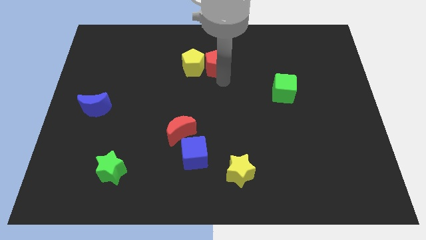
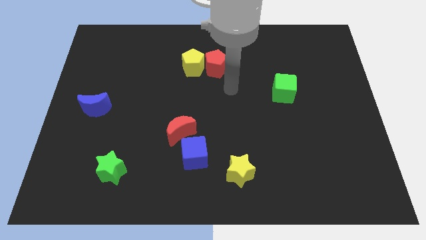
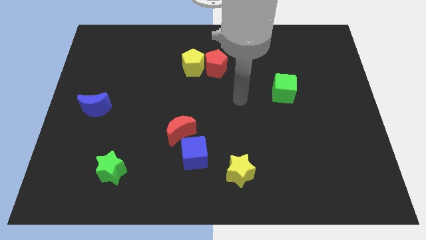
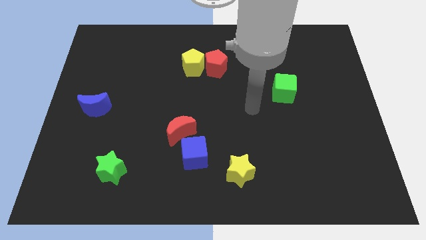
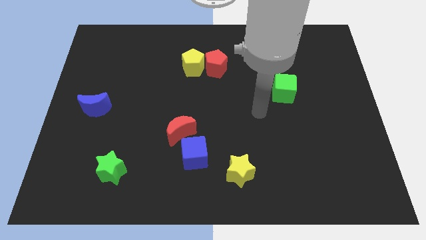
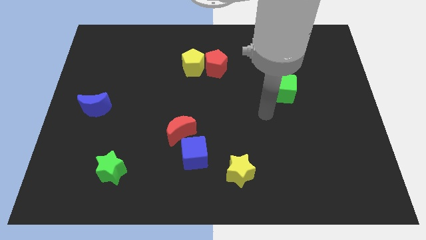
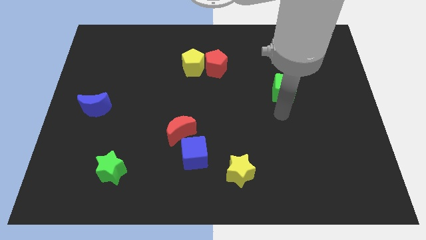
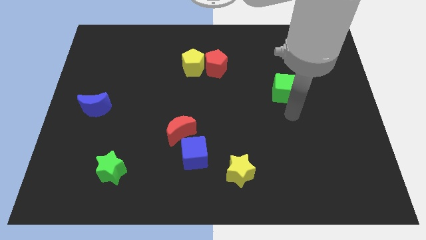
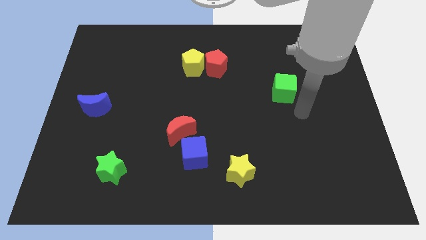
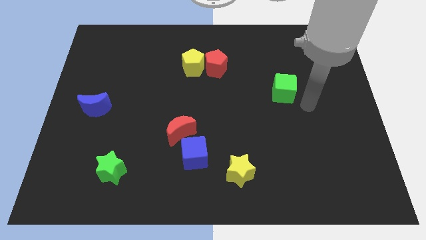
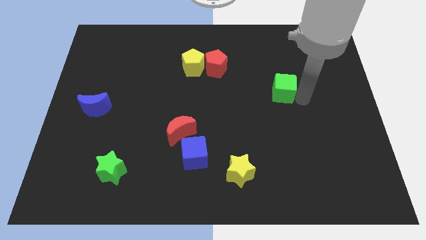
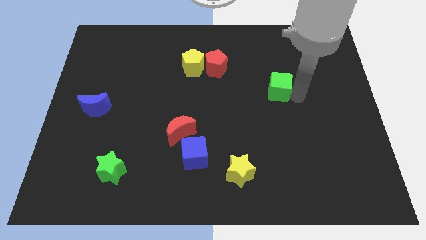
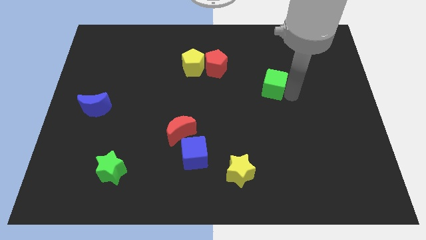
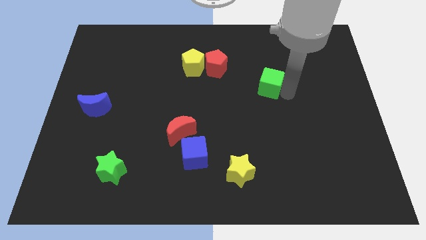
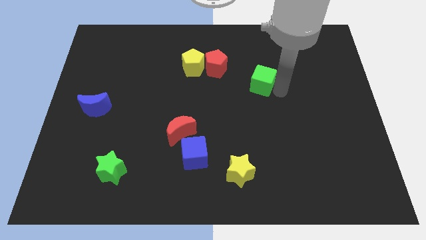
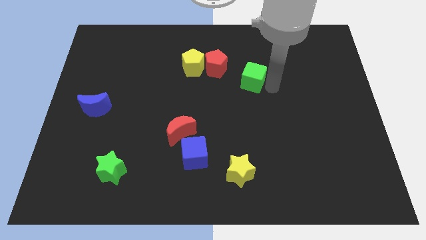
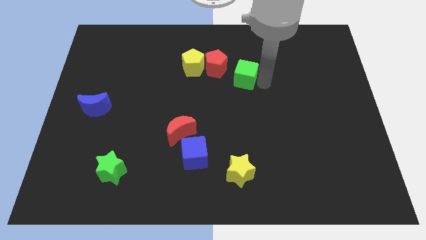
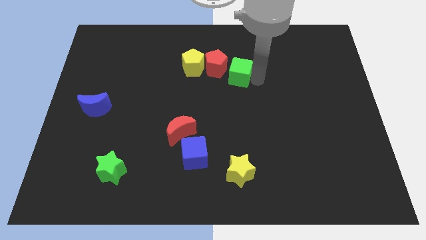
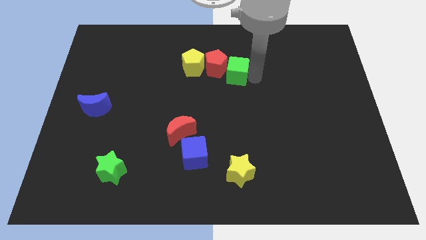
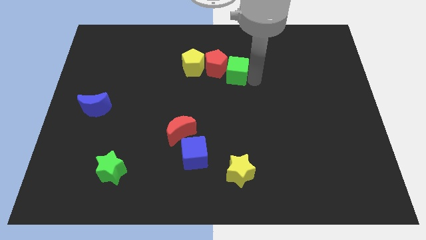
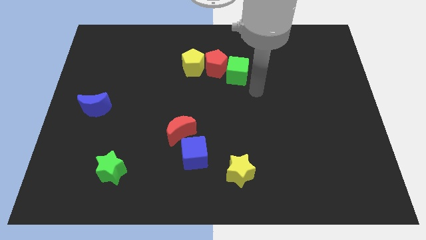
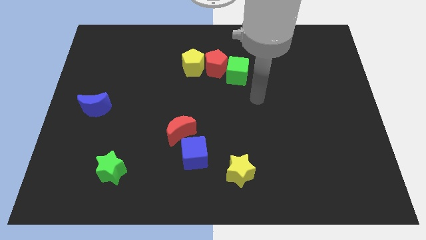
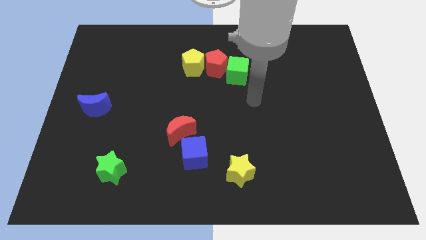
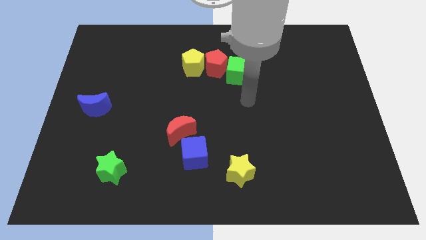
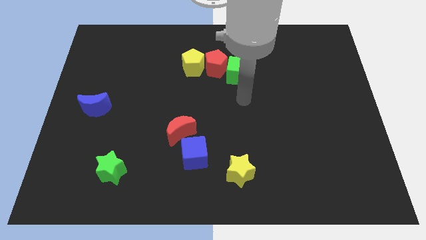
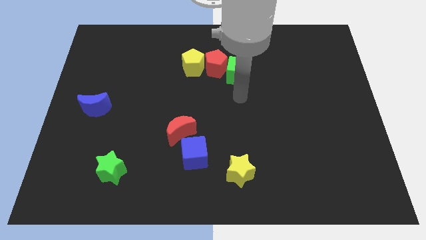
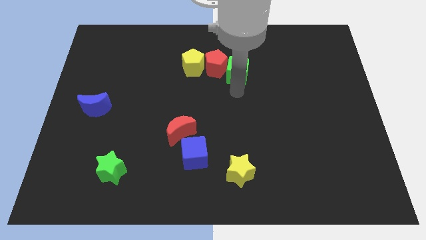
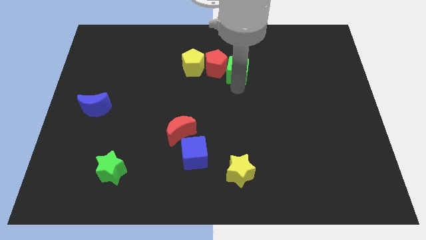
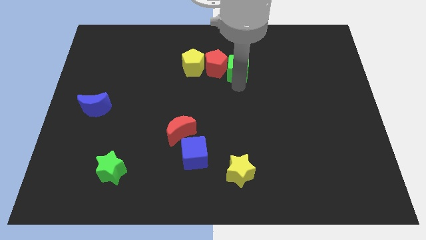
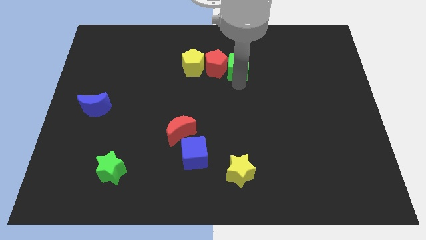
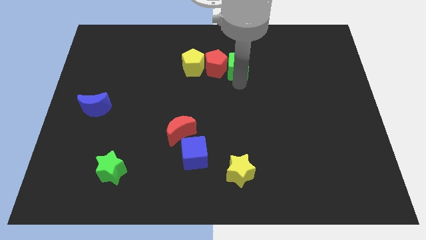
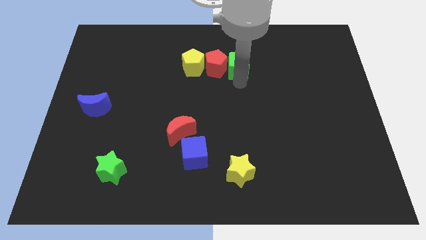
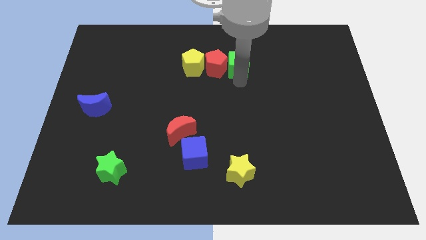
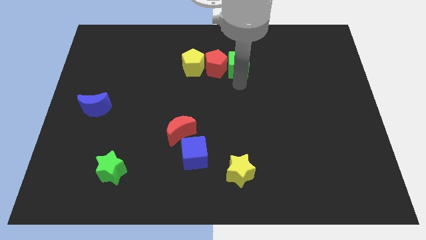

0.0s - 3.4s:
slide the green cube parallel right to the red pentagon

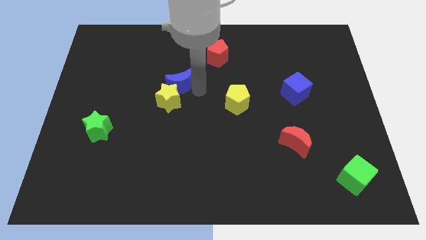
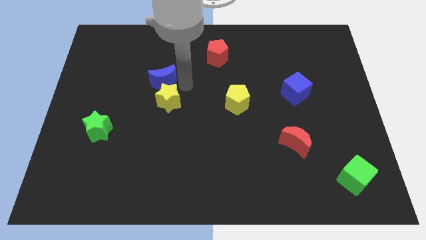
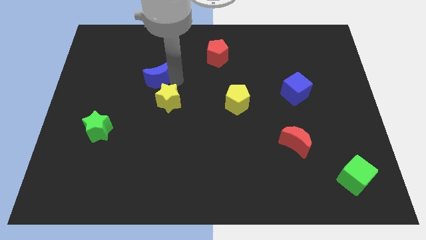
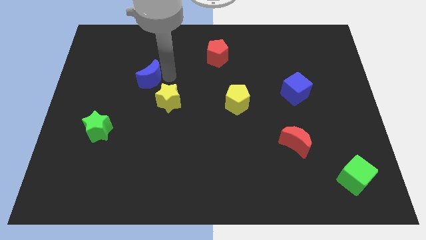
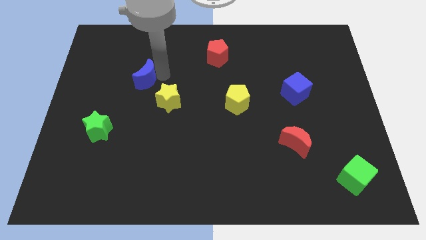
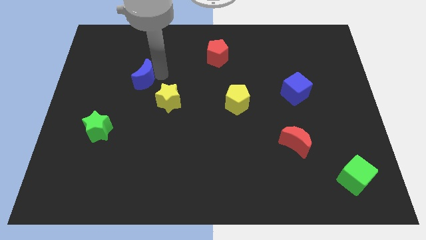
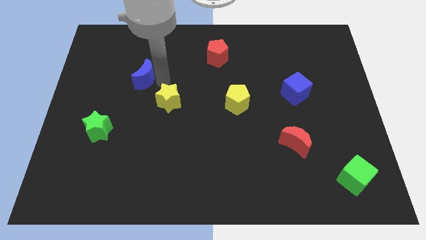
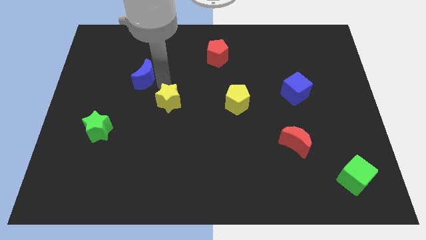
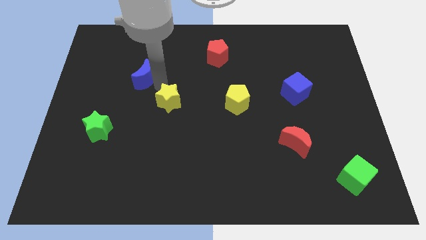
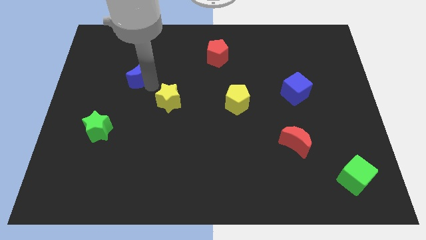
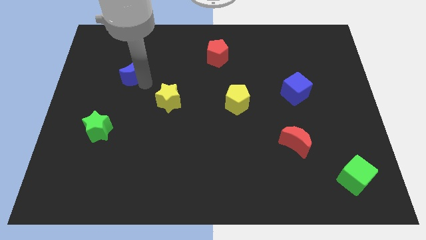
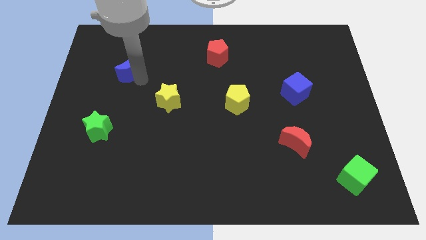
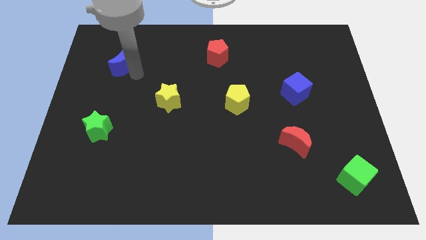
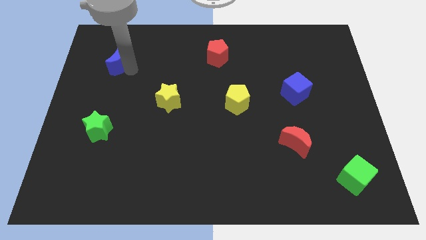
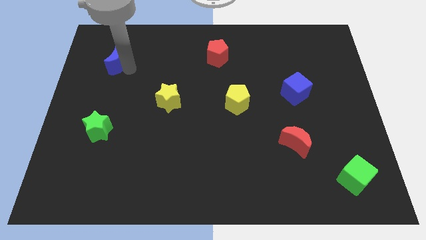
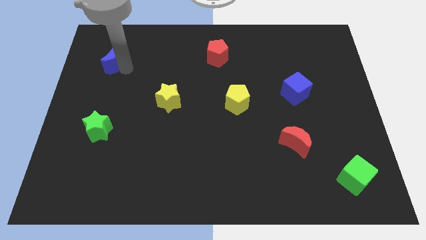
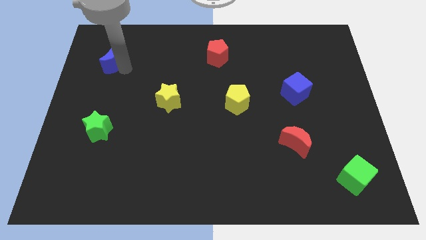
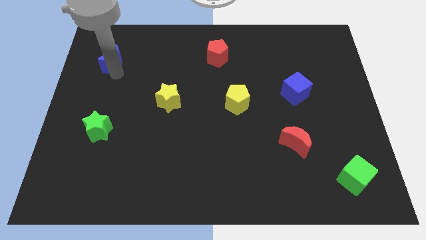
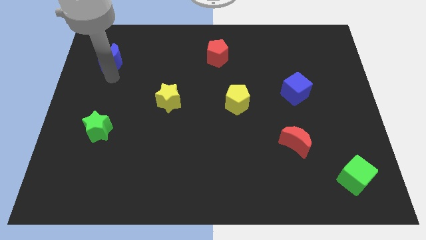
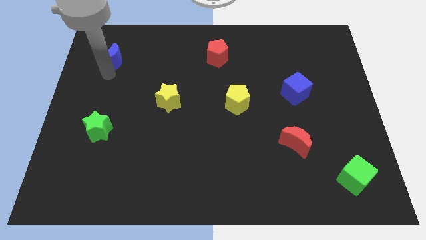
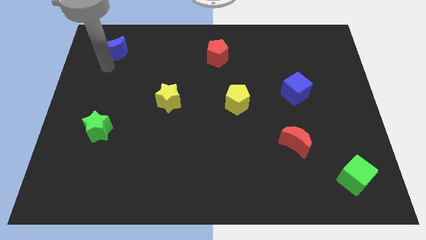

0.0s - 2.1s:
move the blue crescent vertical above green star

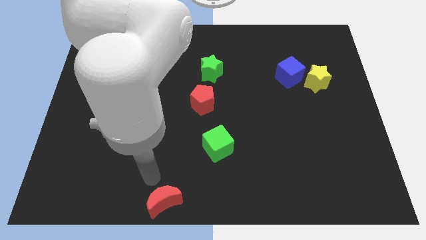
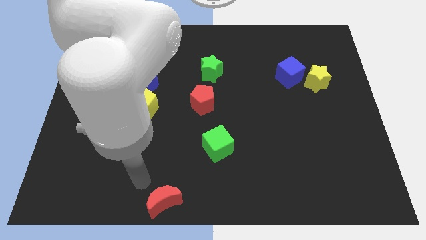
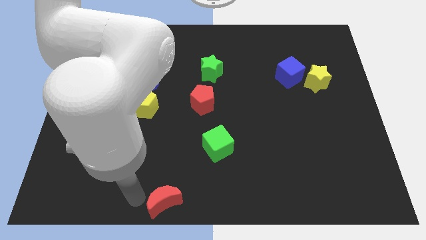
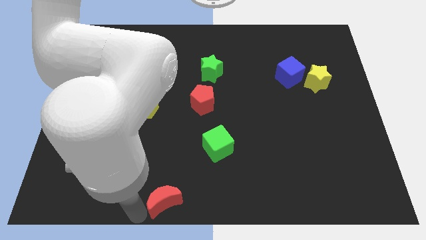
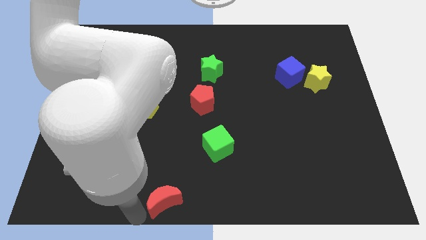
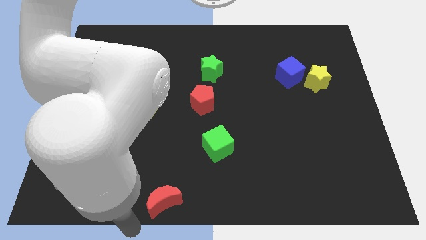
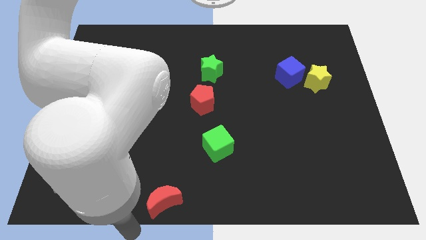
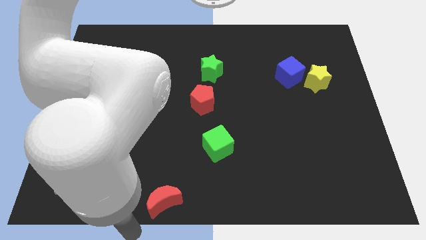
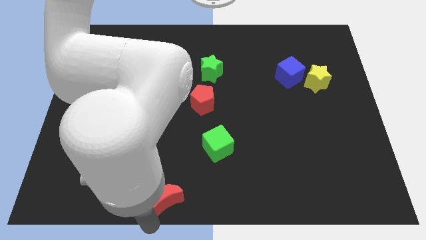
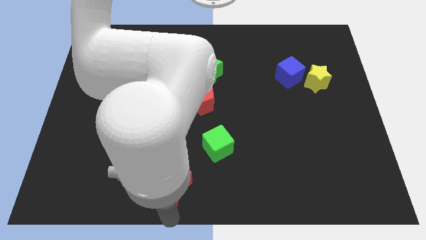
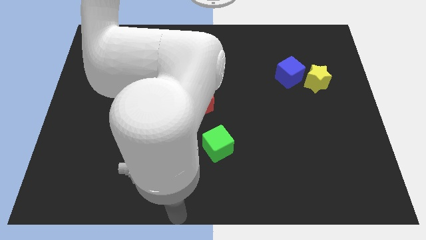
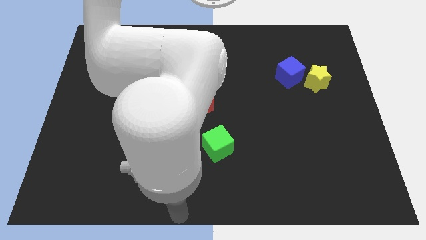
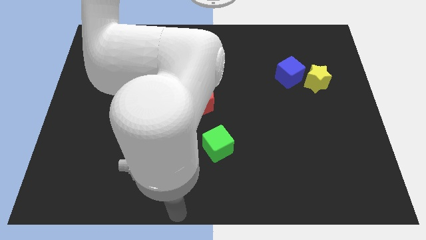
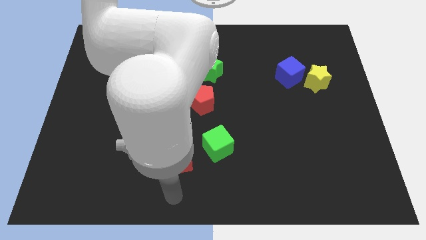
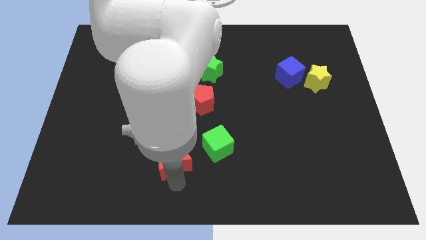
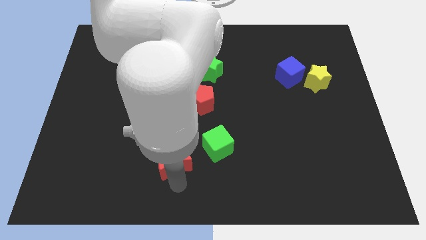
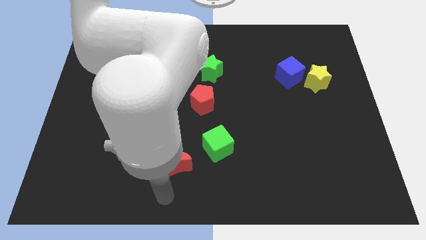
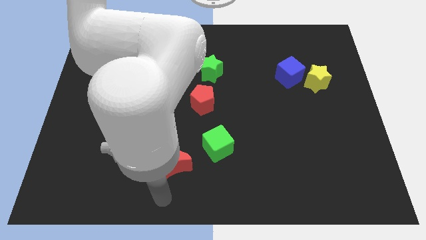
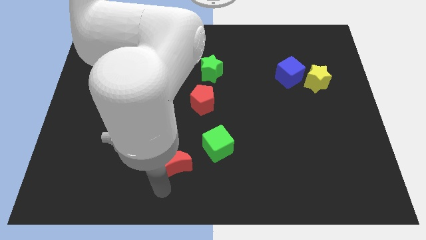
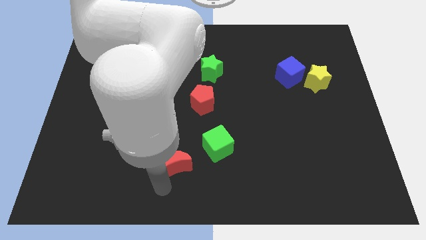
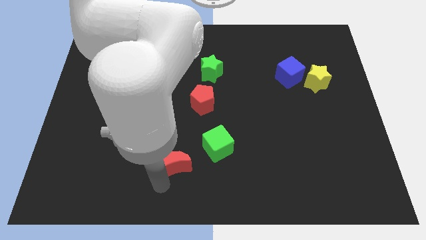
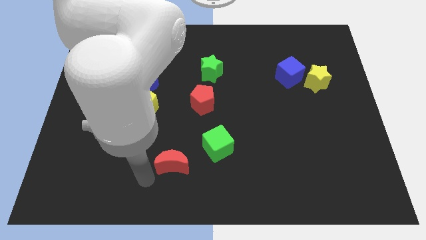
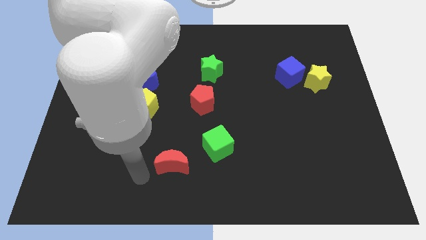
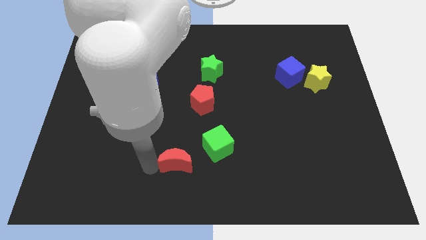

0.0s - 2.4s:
move red crescent towards the green cube

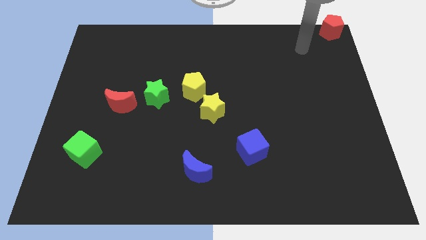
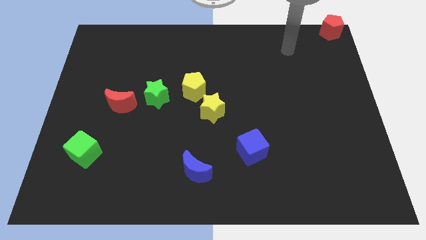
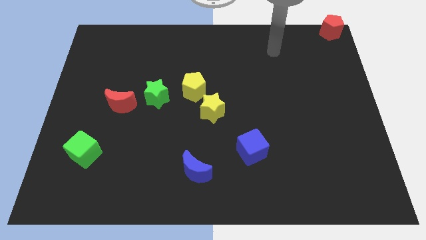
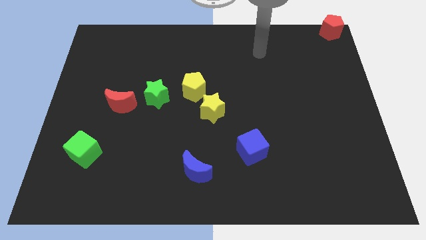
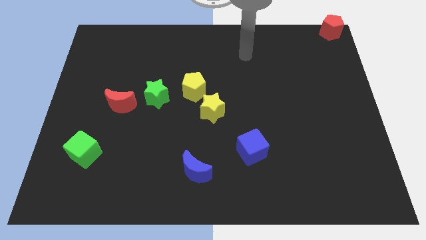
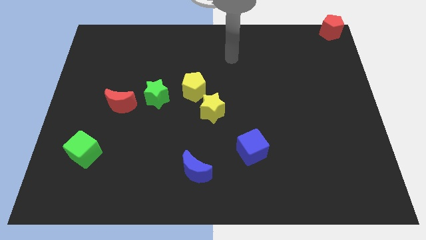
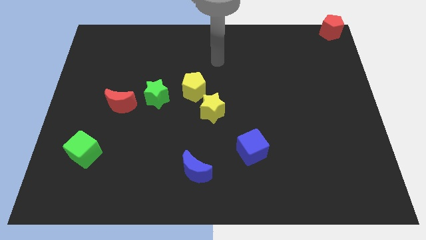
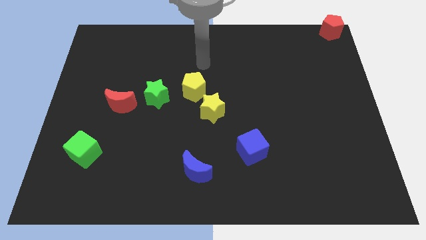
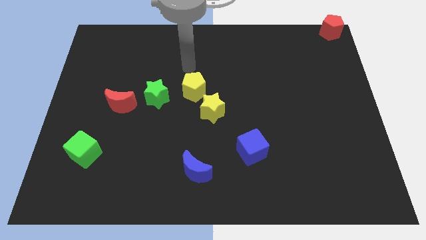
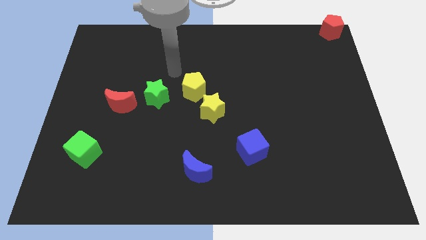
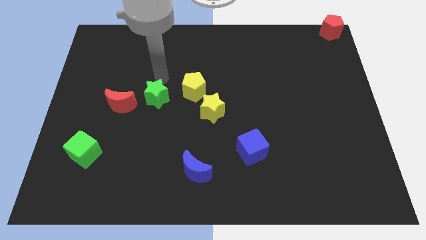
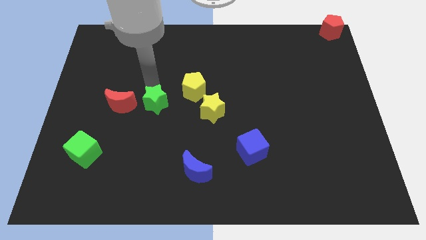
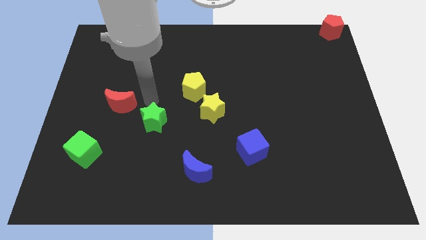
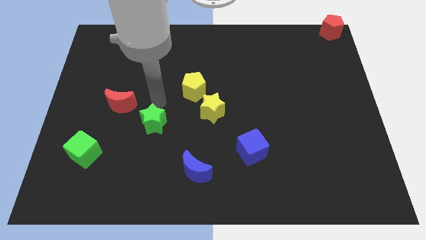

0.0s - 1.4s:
slide the green star slightly downwards
